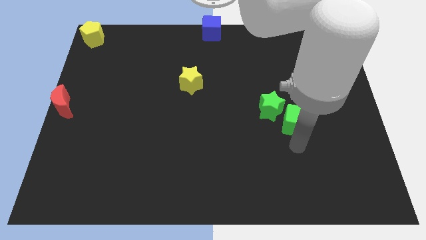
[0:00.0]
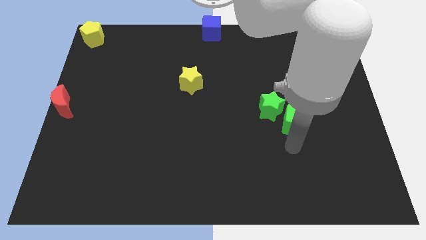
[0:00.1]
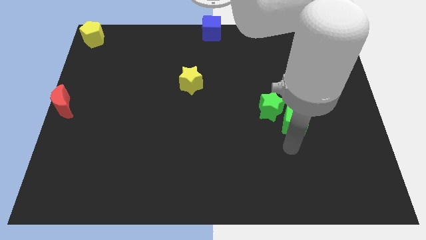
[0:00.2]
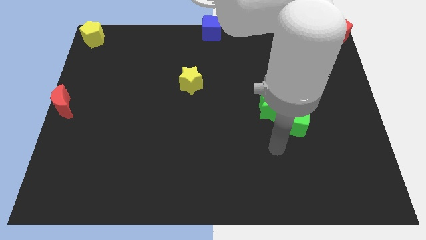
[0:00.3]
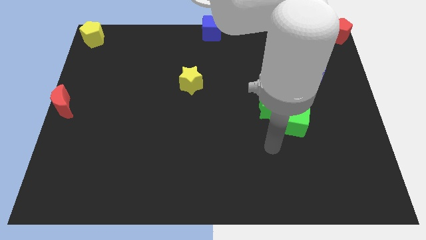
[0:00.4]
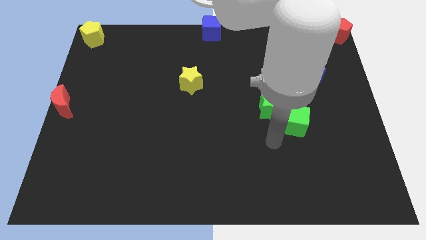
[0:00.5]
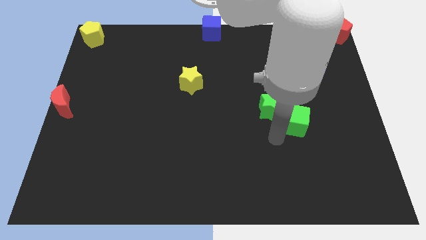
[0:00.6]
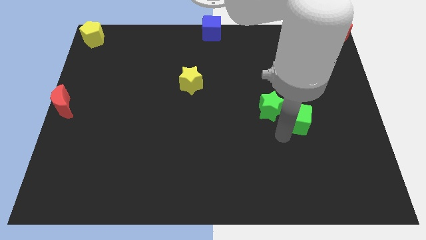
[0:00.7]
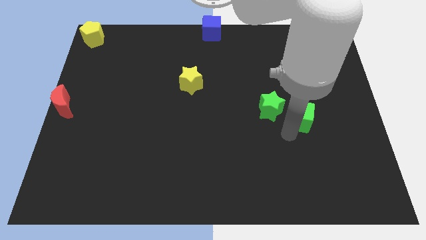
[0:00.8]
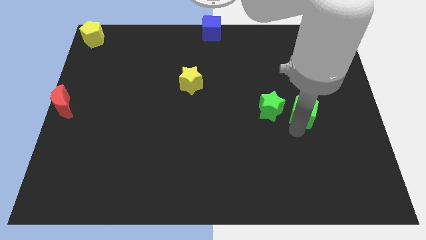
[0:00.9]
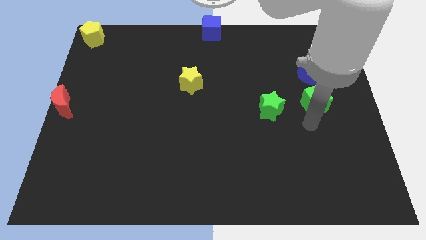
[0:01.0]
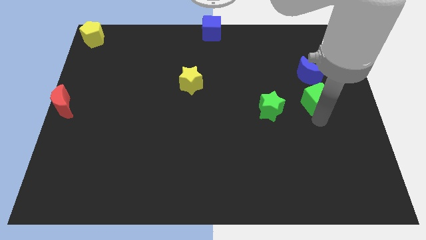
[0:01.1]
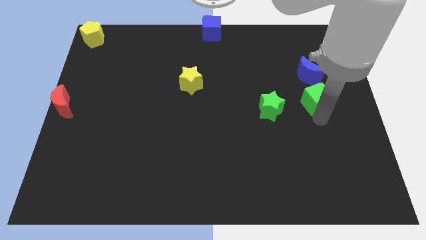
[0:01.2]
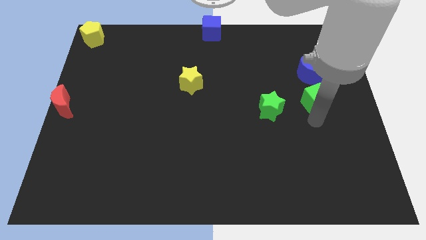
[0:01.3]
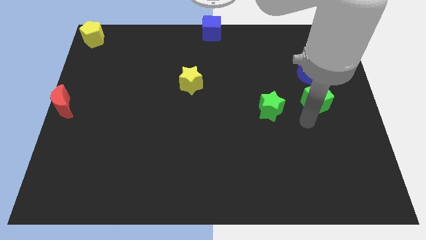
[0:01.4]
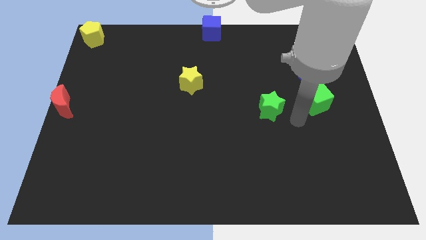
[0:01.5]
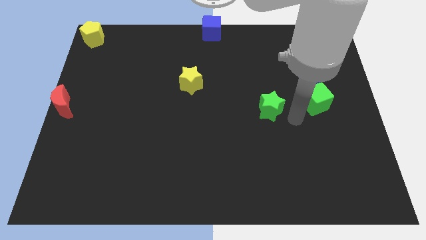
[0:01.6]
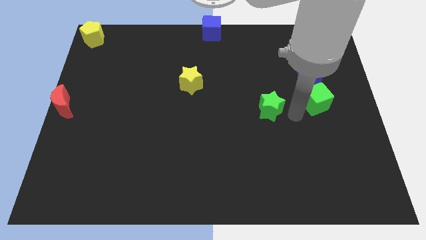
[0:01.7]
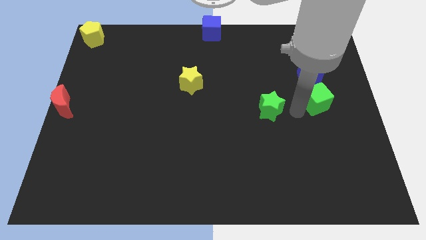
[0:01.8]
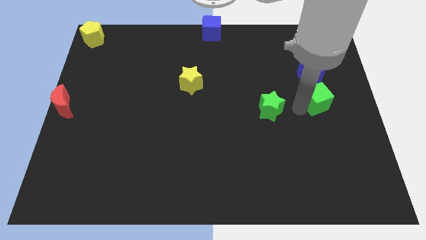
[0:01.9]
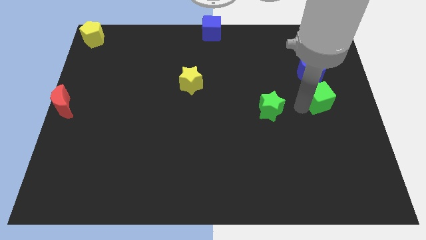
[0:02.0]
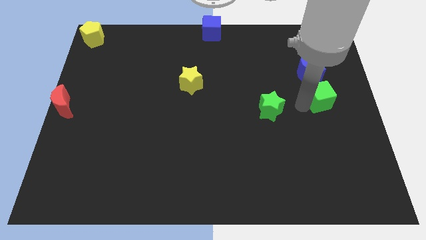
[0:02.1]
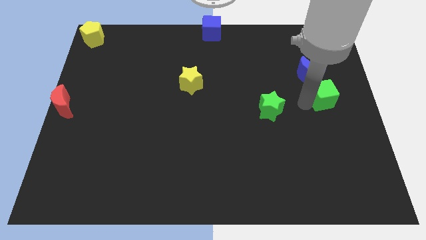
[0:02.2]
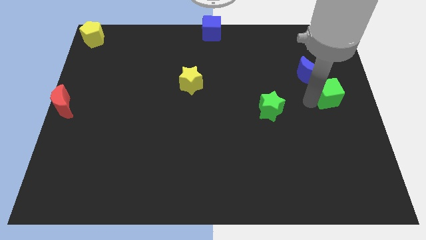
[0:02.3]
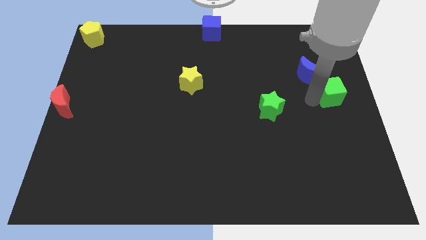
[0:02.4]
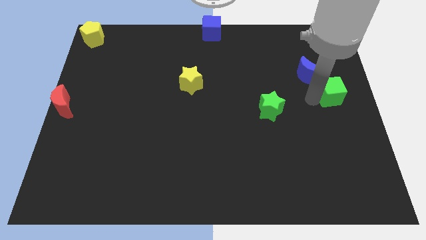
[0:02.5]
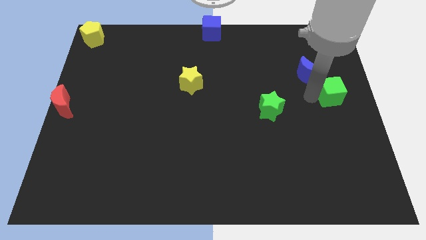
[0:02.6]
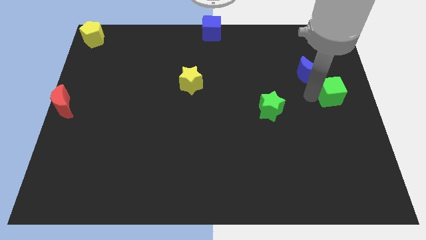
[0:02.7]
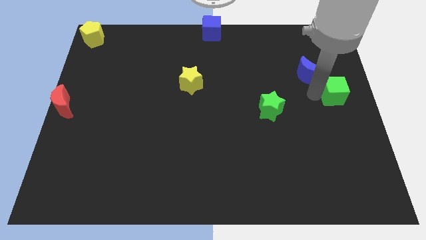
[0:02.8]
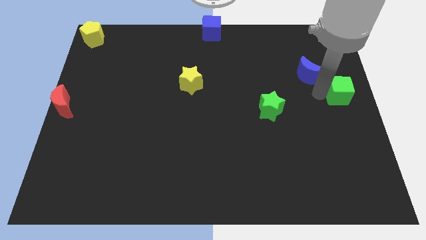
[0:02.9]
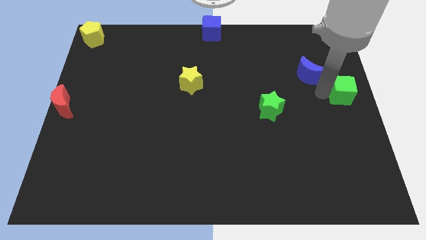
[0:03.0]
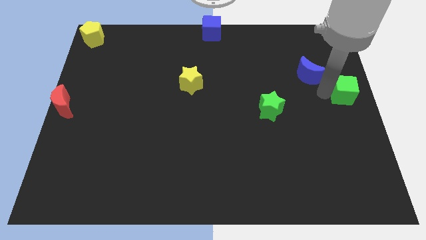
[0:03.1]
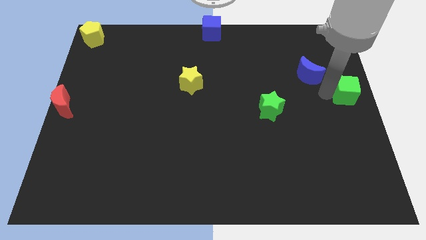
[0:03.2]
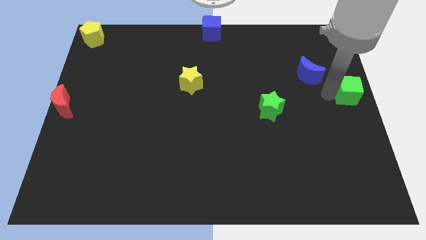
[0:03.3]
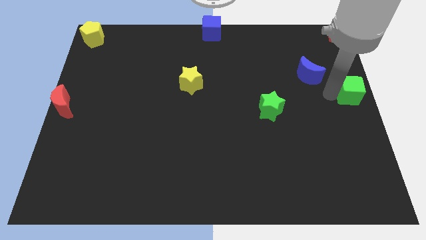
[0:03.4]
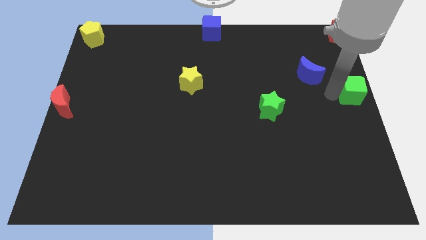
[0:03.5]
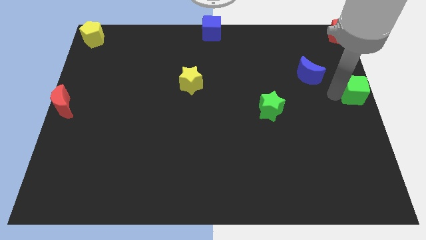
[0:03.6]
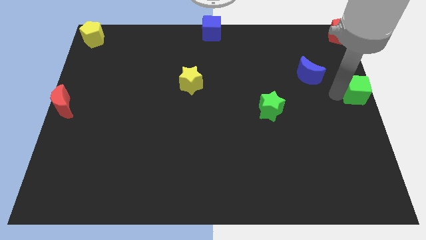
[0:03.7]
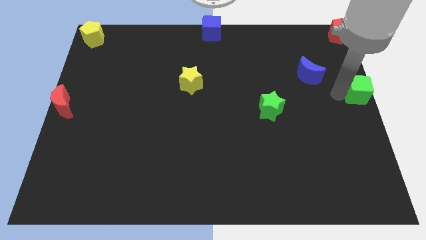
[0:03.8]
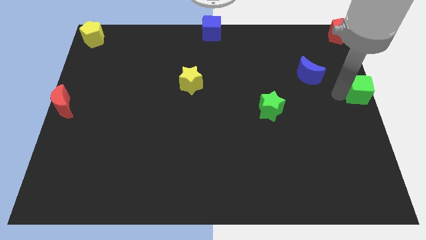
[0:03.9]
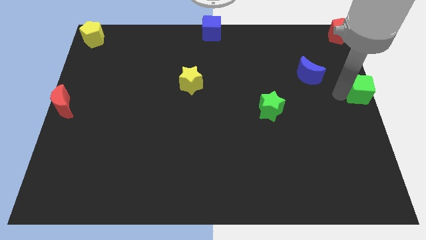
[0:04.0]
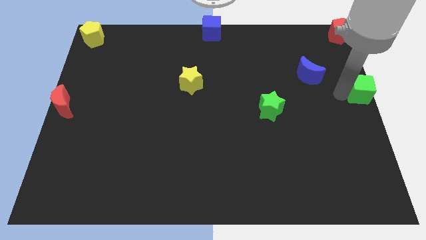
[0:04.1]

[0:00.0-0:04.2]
move the green cube to the right center of the board

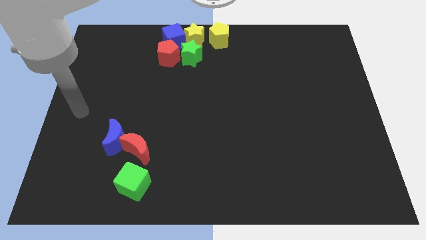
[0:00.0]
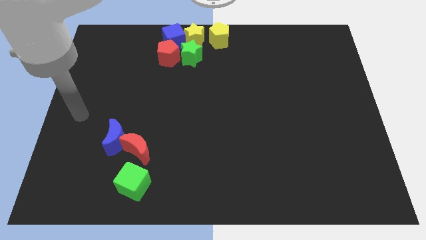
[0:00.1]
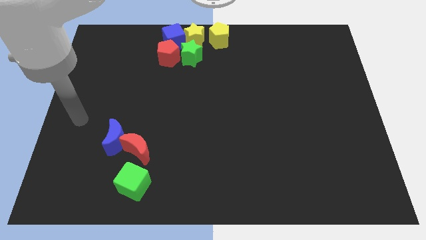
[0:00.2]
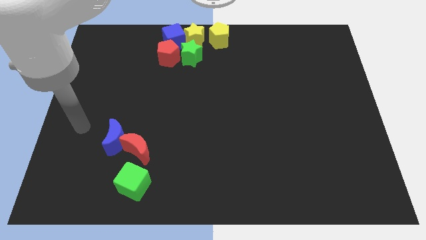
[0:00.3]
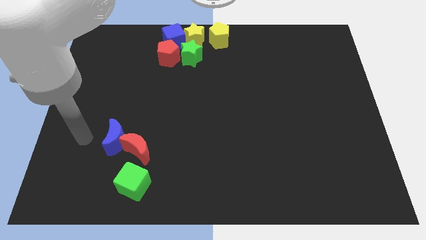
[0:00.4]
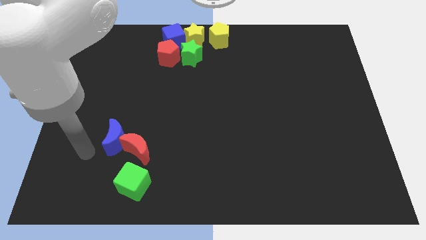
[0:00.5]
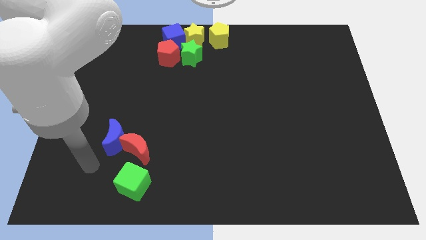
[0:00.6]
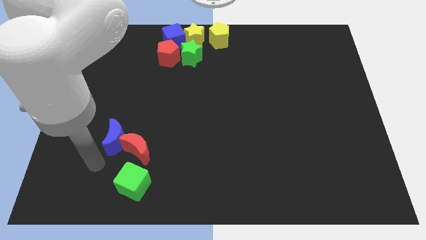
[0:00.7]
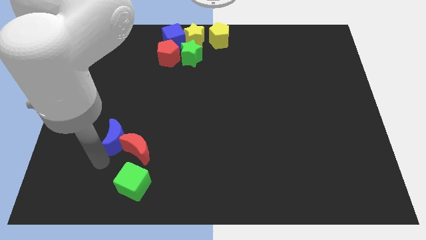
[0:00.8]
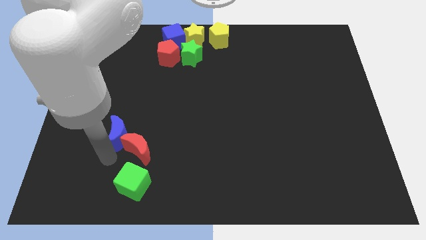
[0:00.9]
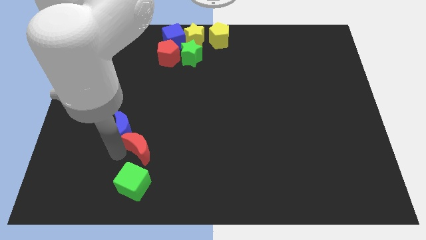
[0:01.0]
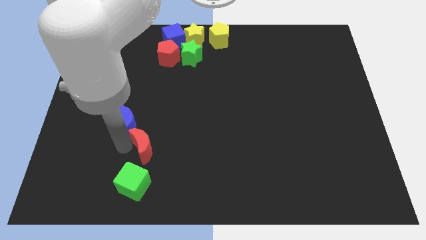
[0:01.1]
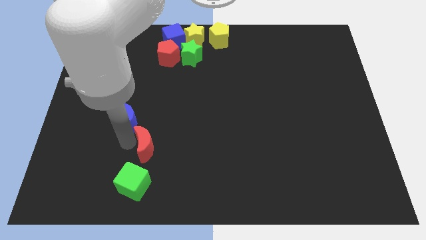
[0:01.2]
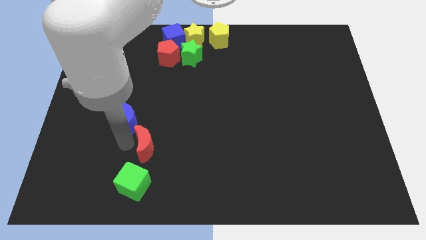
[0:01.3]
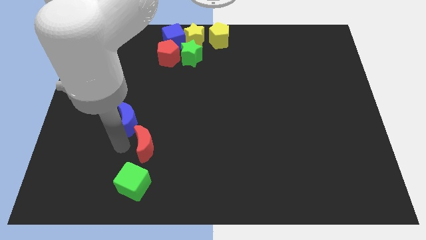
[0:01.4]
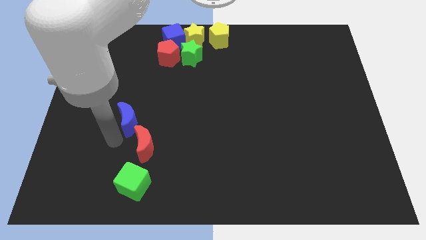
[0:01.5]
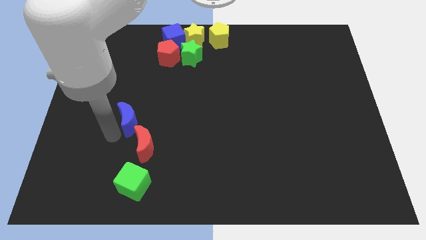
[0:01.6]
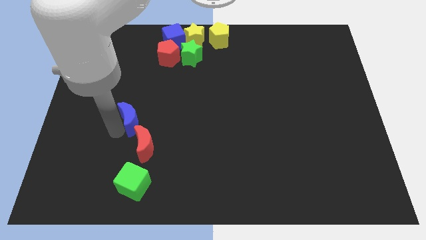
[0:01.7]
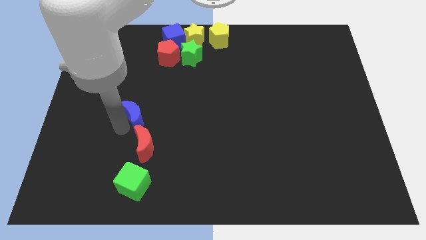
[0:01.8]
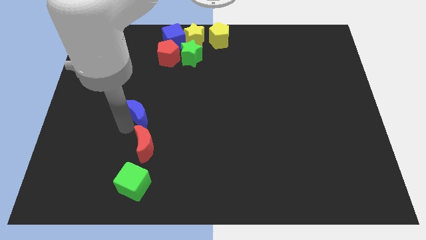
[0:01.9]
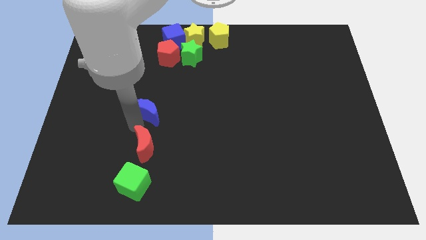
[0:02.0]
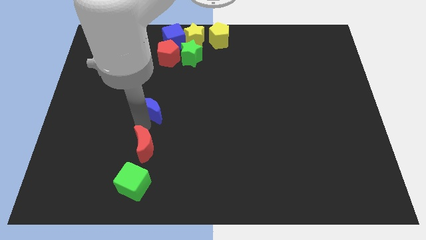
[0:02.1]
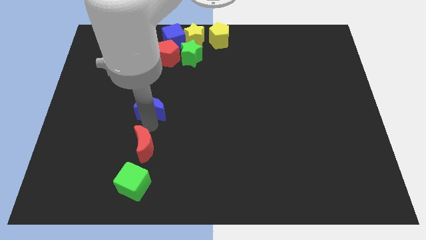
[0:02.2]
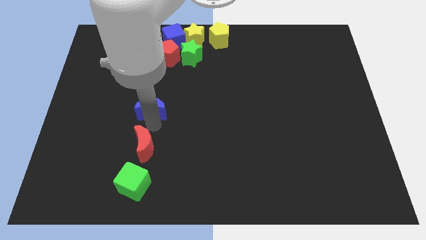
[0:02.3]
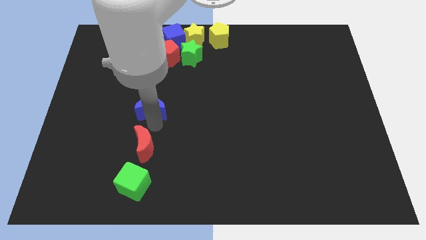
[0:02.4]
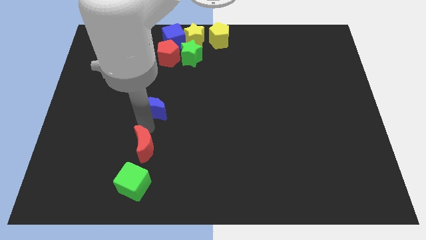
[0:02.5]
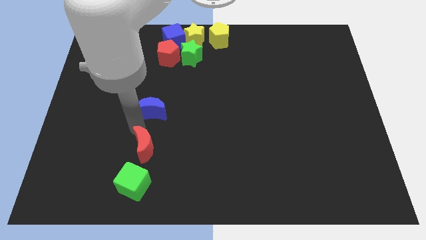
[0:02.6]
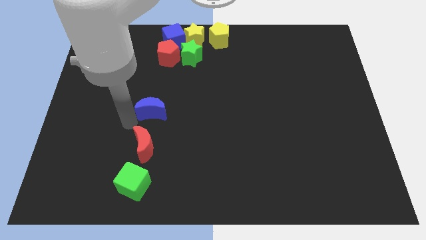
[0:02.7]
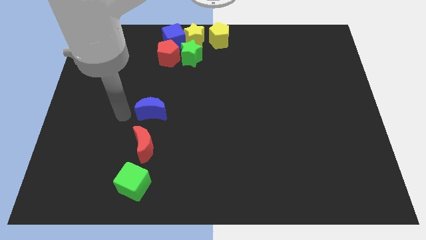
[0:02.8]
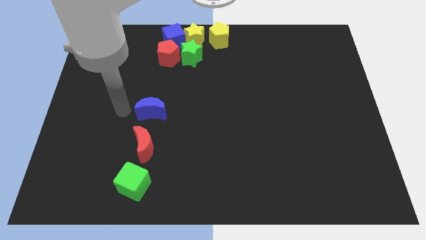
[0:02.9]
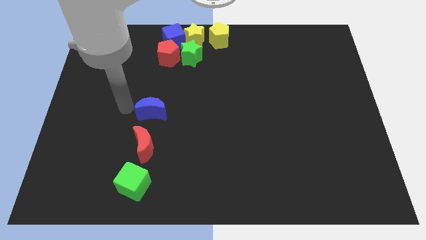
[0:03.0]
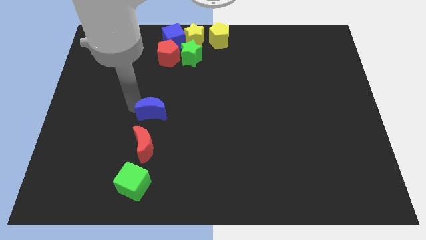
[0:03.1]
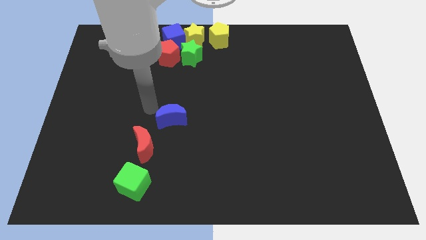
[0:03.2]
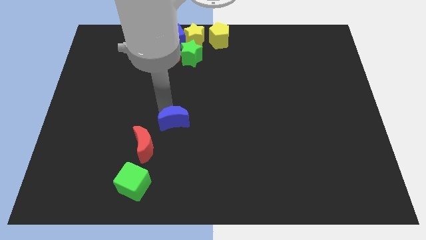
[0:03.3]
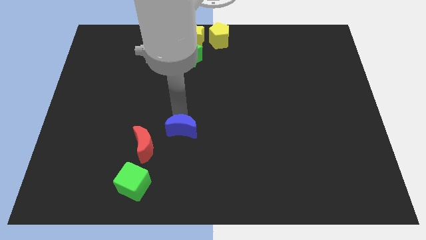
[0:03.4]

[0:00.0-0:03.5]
place the blue moon diagonally top right to the red moon

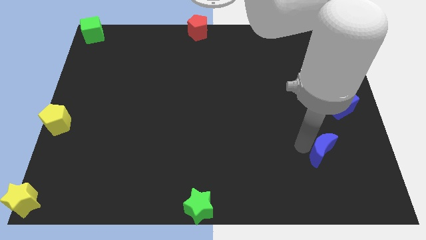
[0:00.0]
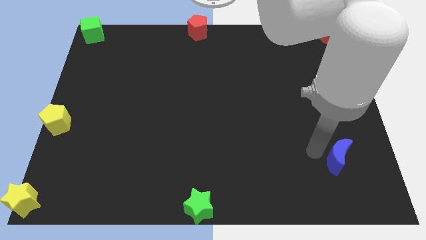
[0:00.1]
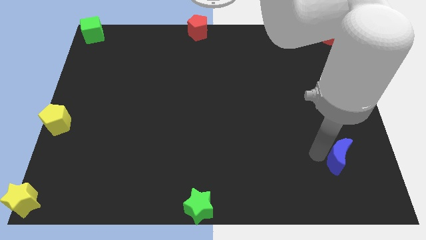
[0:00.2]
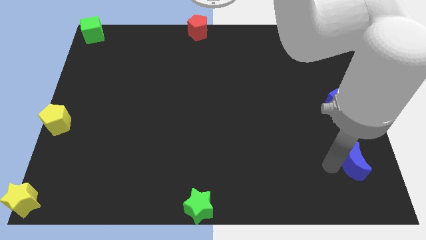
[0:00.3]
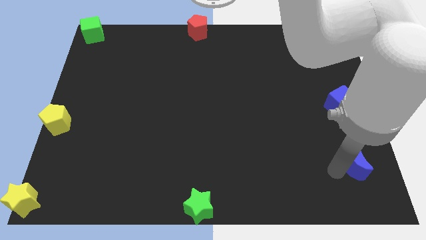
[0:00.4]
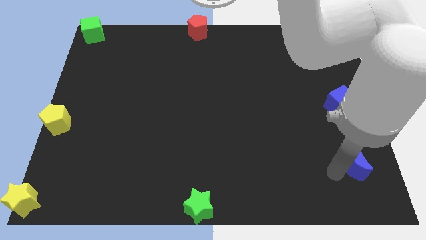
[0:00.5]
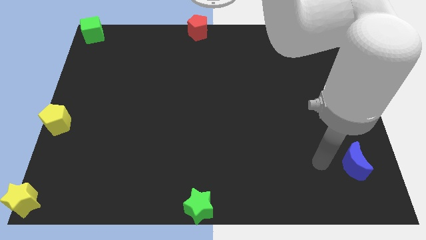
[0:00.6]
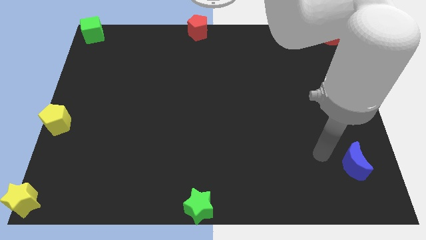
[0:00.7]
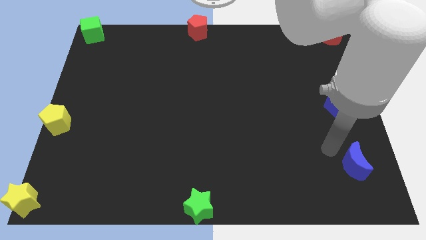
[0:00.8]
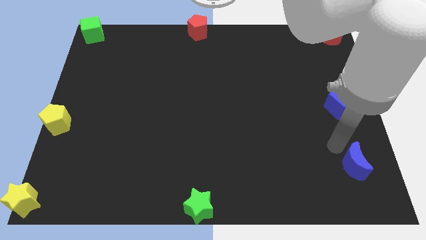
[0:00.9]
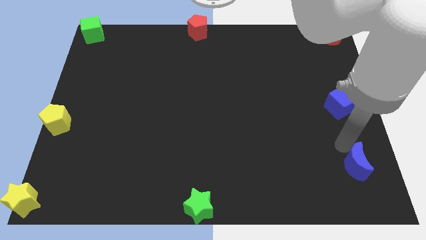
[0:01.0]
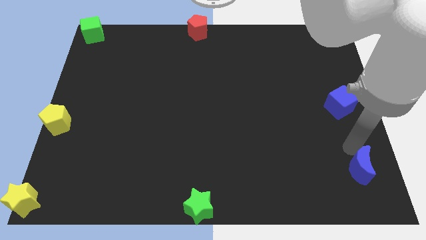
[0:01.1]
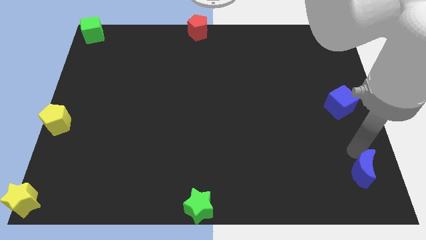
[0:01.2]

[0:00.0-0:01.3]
place the blue crescent below blue cube

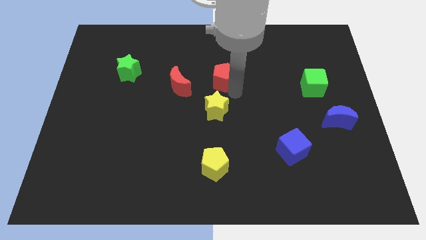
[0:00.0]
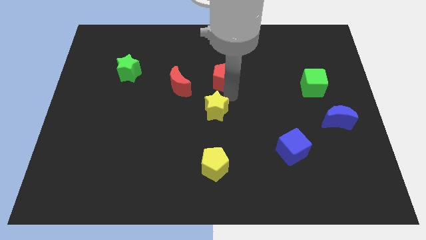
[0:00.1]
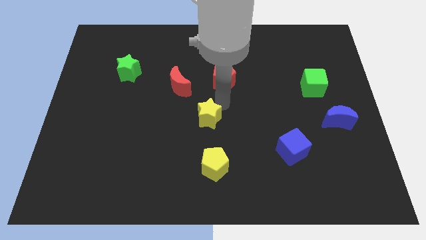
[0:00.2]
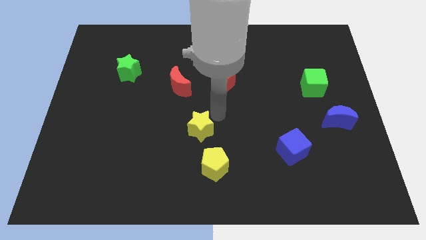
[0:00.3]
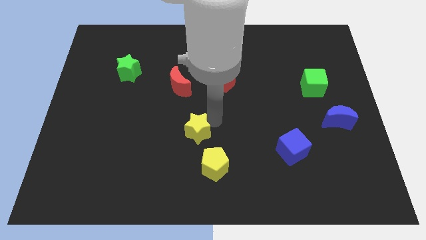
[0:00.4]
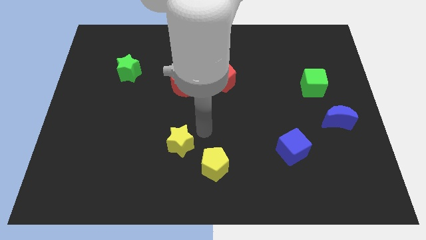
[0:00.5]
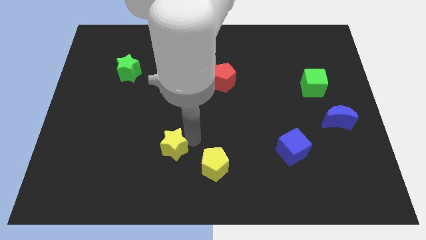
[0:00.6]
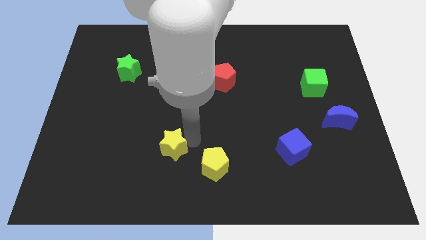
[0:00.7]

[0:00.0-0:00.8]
move the yellow star below the red crescent
